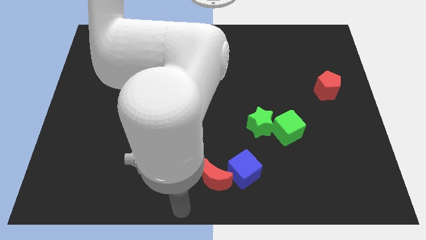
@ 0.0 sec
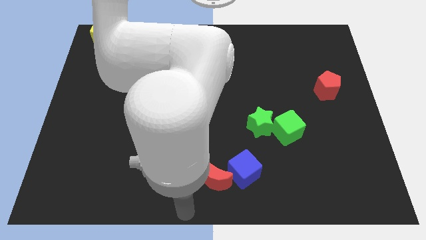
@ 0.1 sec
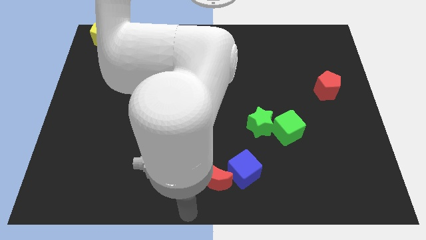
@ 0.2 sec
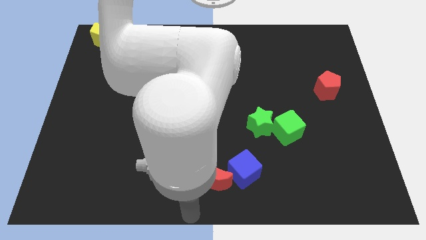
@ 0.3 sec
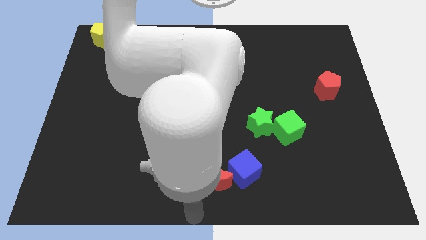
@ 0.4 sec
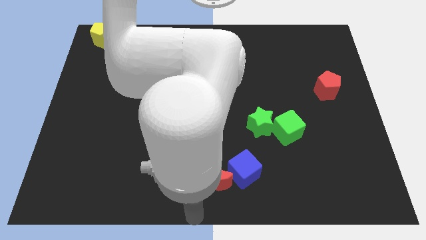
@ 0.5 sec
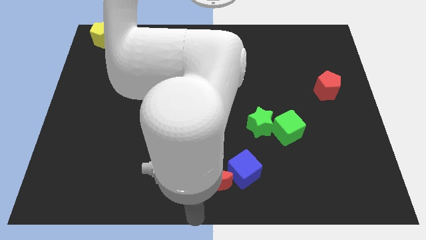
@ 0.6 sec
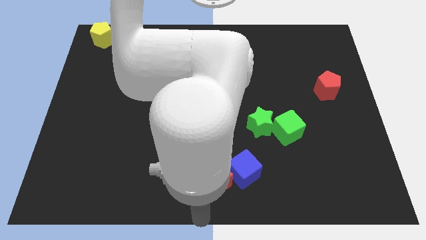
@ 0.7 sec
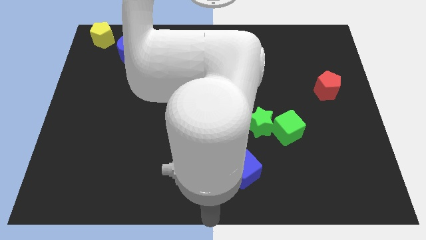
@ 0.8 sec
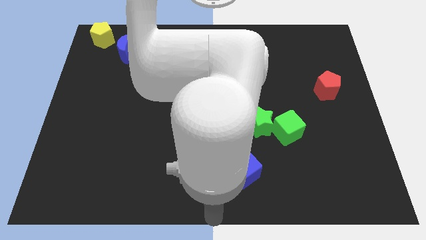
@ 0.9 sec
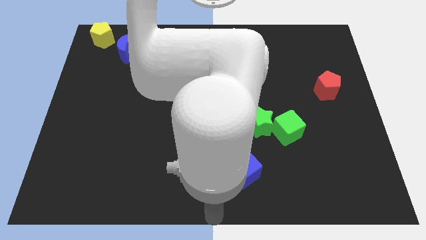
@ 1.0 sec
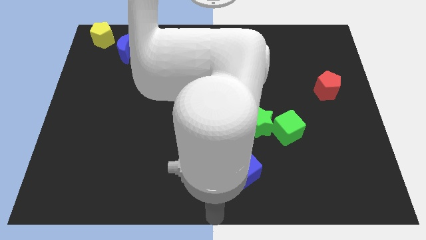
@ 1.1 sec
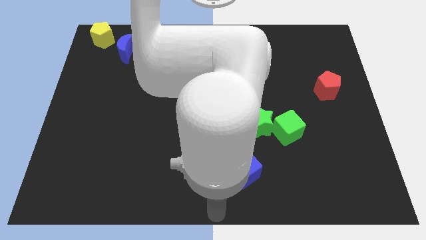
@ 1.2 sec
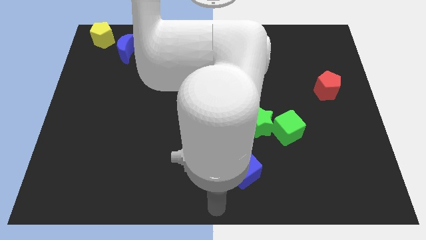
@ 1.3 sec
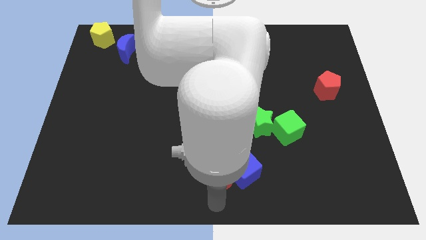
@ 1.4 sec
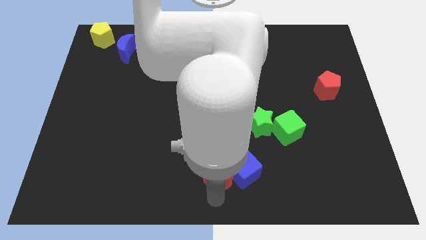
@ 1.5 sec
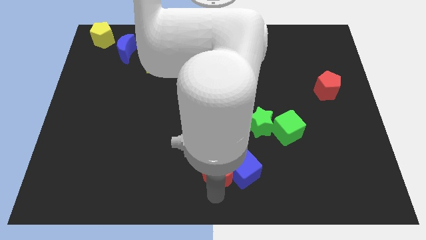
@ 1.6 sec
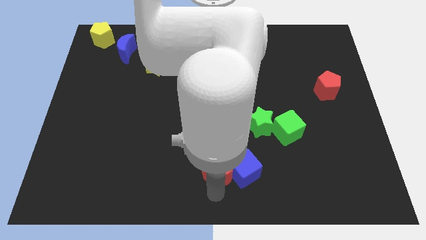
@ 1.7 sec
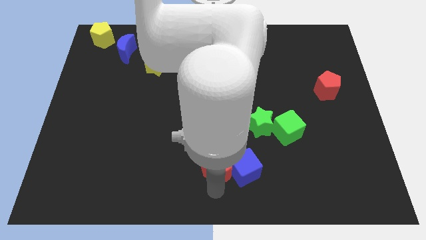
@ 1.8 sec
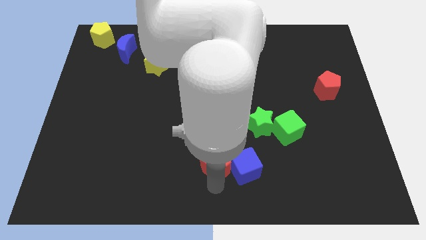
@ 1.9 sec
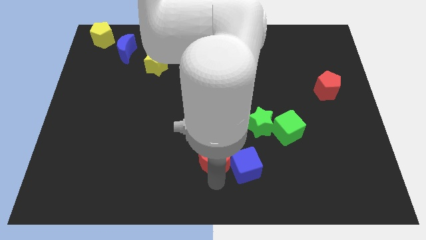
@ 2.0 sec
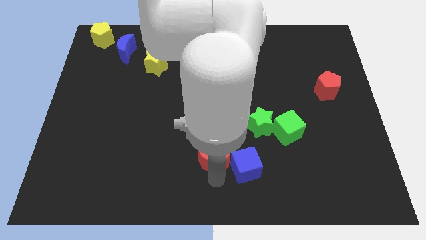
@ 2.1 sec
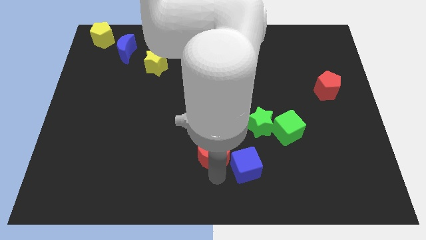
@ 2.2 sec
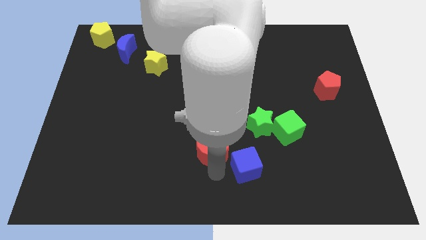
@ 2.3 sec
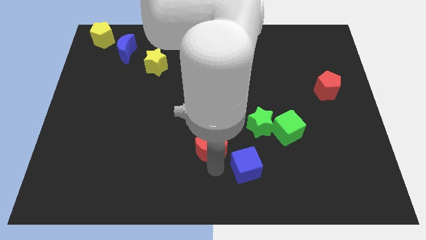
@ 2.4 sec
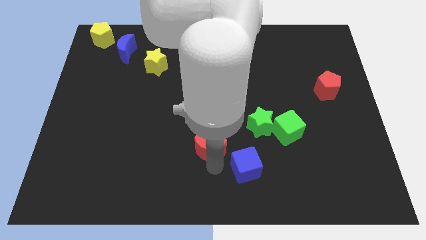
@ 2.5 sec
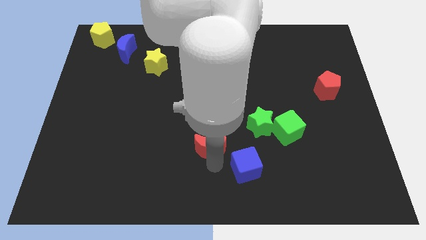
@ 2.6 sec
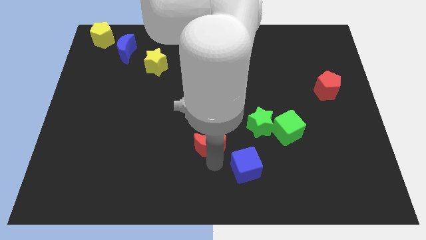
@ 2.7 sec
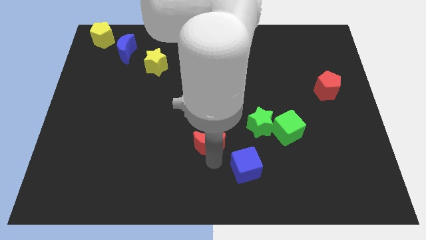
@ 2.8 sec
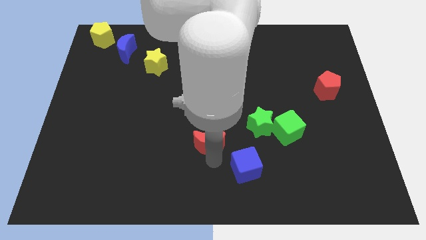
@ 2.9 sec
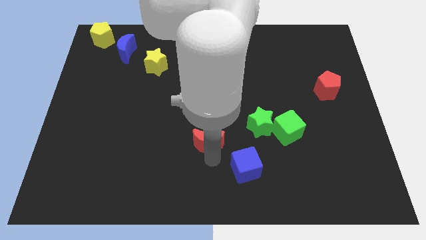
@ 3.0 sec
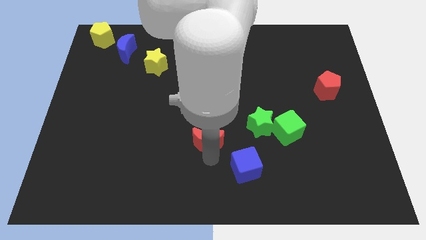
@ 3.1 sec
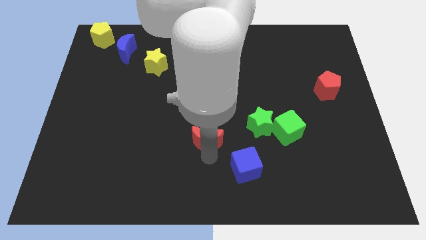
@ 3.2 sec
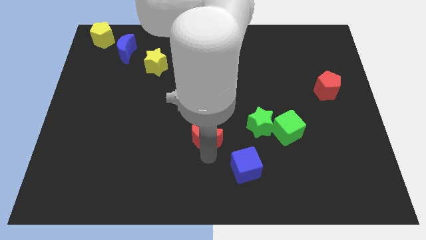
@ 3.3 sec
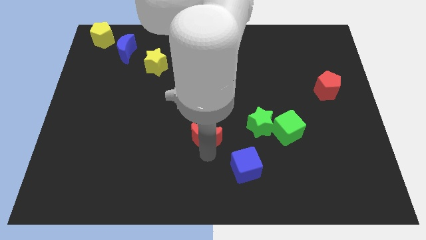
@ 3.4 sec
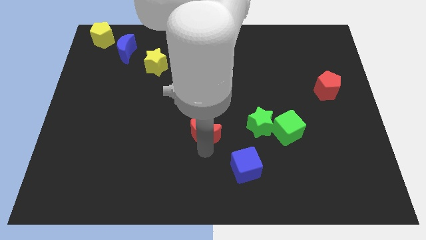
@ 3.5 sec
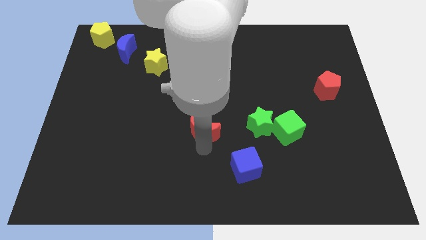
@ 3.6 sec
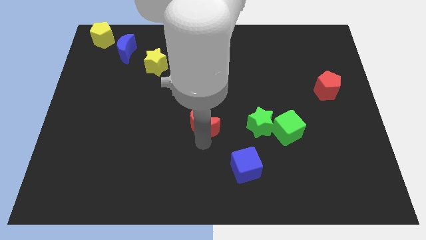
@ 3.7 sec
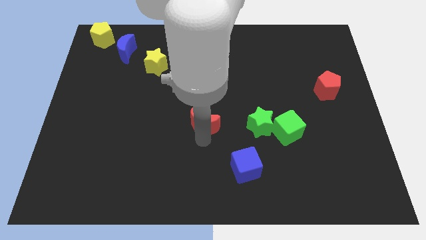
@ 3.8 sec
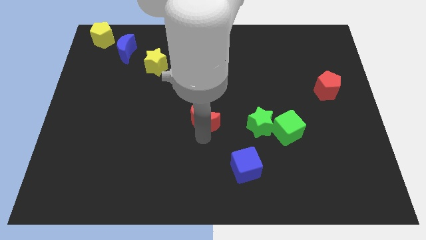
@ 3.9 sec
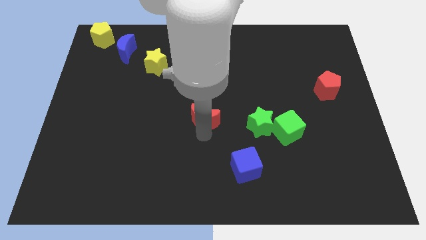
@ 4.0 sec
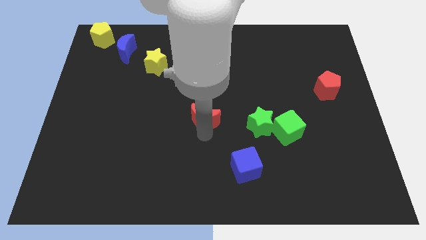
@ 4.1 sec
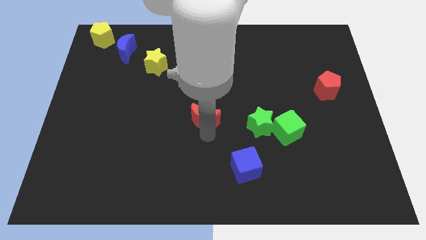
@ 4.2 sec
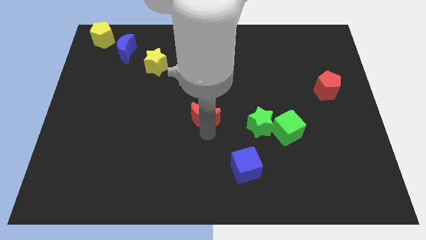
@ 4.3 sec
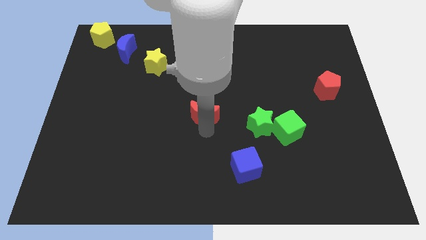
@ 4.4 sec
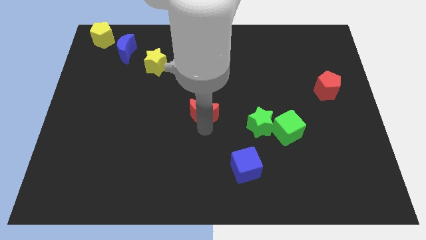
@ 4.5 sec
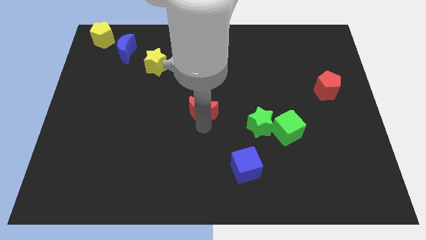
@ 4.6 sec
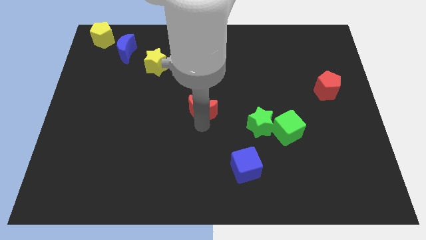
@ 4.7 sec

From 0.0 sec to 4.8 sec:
separate the red moon and blue cube

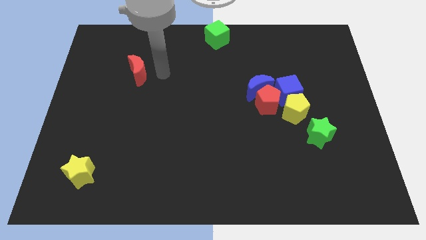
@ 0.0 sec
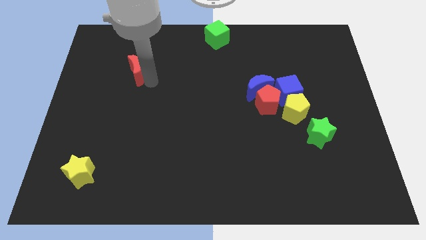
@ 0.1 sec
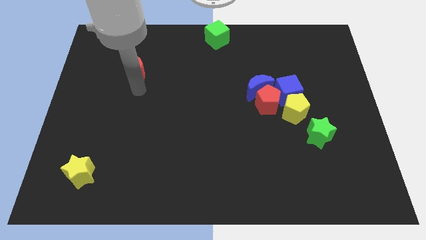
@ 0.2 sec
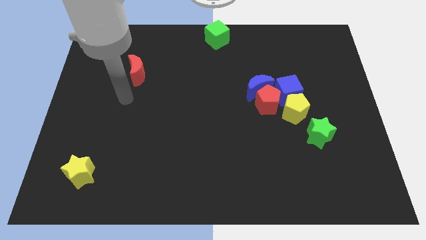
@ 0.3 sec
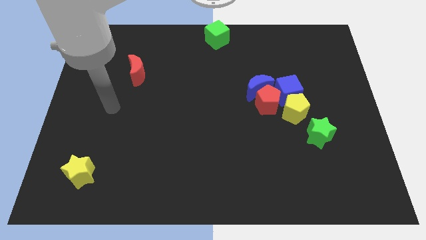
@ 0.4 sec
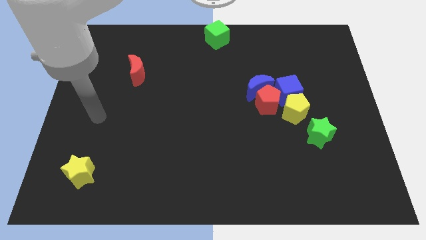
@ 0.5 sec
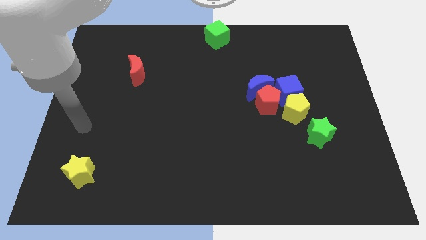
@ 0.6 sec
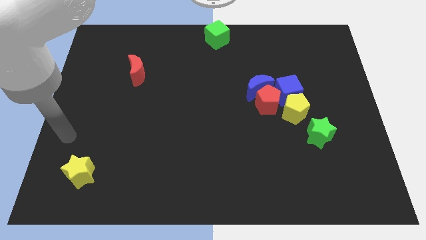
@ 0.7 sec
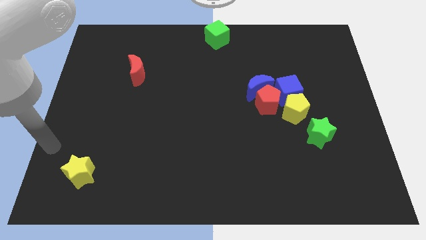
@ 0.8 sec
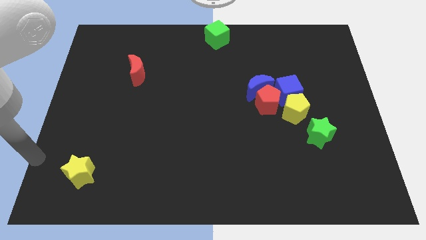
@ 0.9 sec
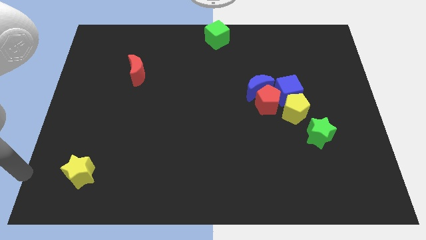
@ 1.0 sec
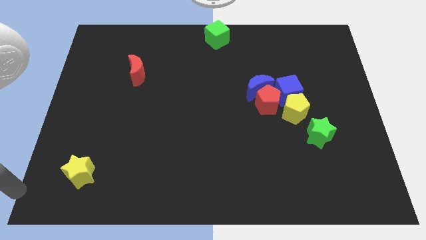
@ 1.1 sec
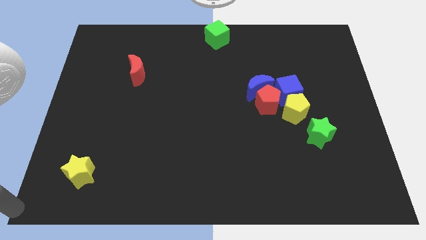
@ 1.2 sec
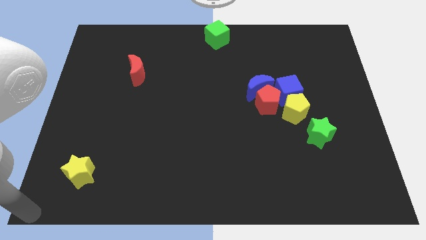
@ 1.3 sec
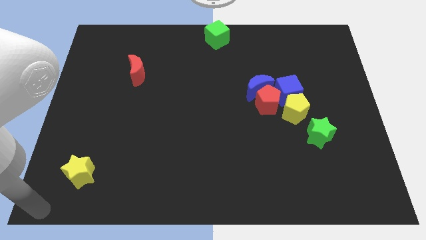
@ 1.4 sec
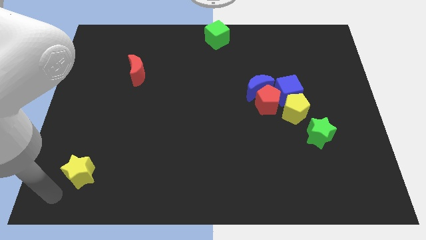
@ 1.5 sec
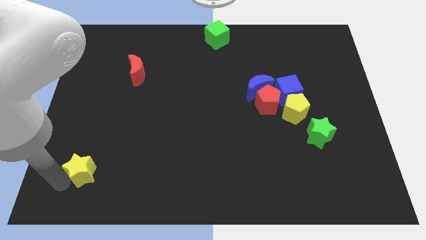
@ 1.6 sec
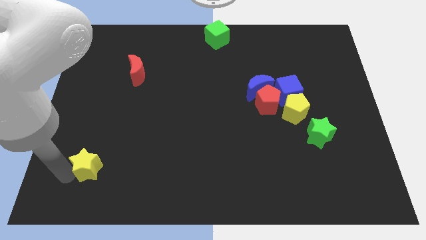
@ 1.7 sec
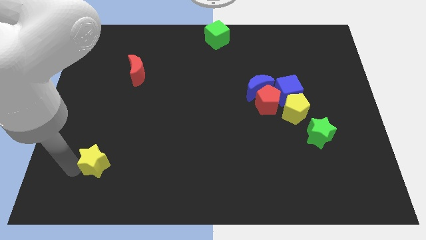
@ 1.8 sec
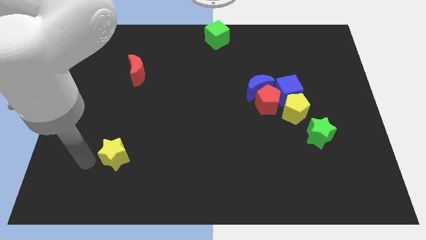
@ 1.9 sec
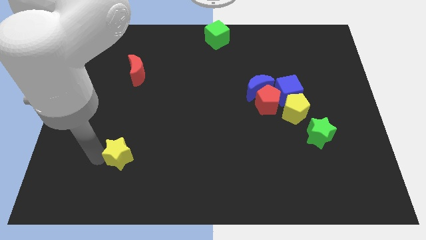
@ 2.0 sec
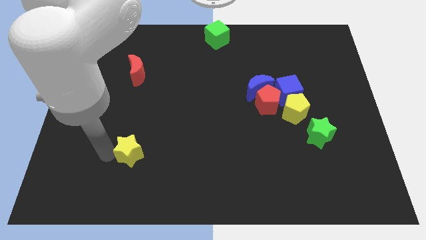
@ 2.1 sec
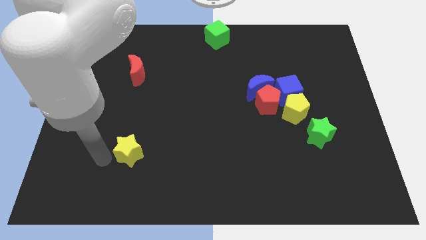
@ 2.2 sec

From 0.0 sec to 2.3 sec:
place the yellow star vertically below the red crescent

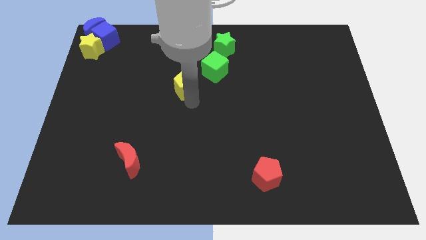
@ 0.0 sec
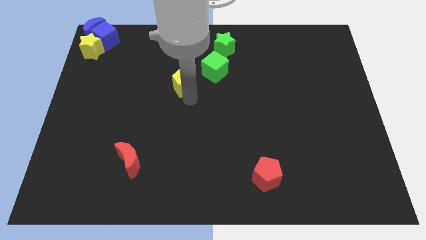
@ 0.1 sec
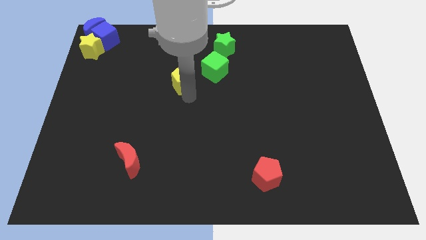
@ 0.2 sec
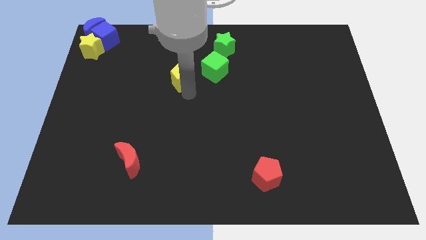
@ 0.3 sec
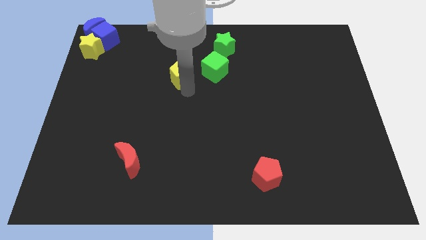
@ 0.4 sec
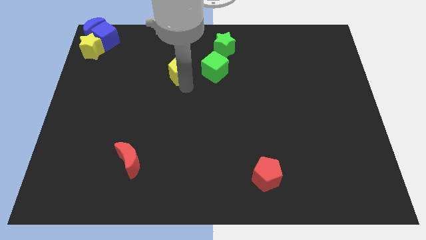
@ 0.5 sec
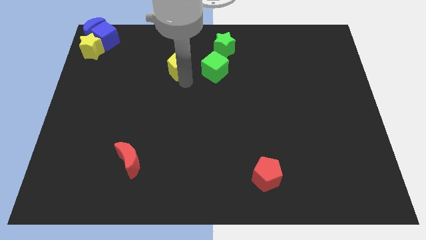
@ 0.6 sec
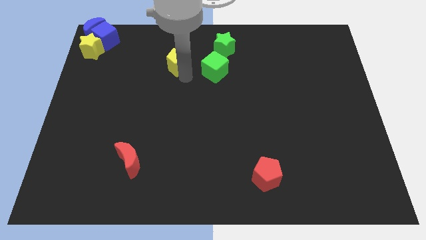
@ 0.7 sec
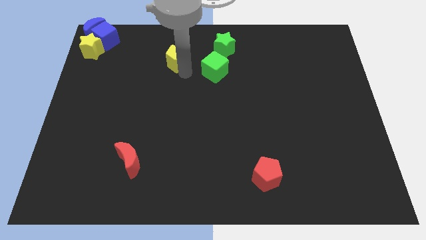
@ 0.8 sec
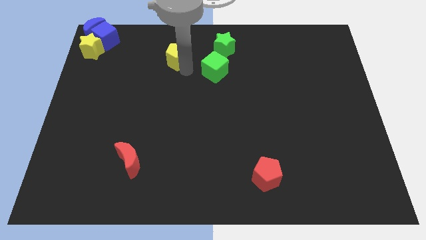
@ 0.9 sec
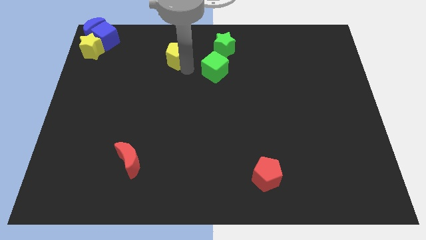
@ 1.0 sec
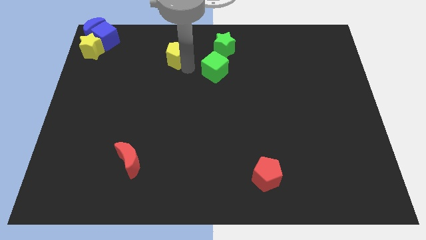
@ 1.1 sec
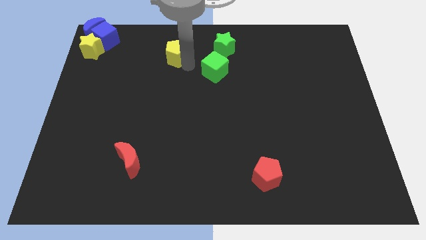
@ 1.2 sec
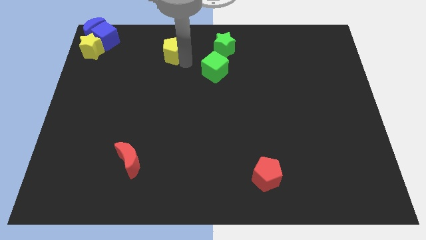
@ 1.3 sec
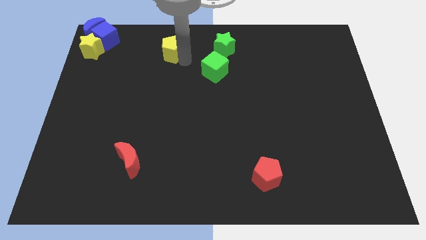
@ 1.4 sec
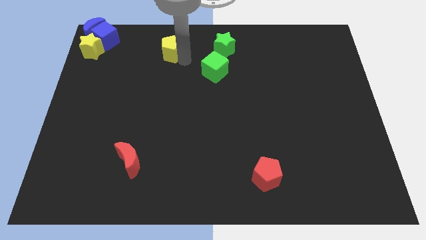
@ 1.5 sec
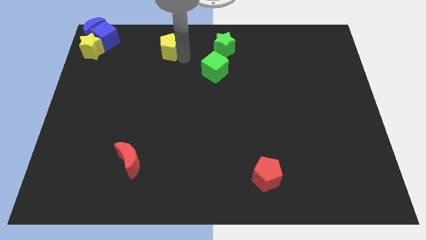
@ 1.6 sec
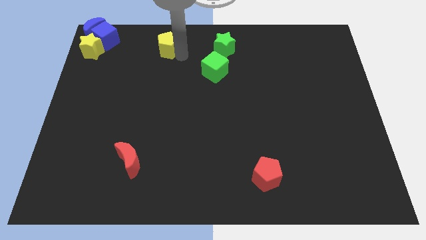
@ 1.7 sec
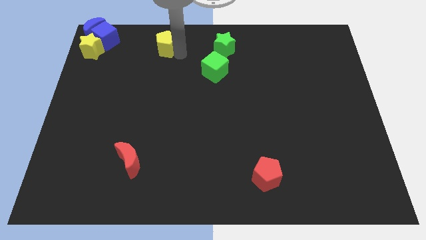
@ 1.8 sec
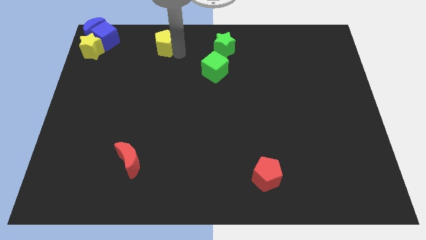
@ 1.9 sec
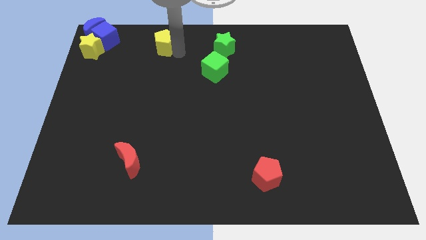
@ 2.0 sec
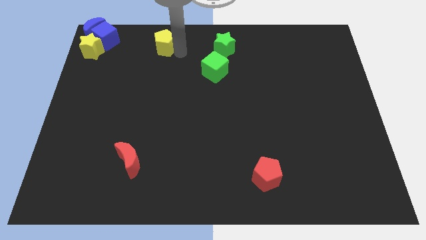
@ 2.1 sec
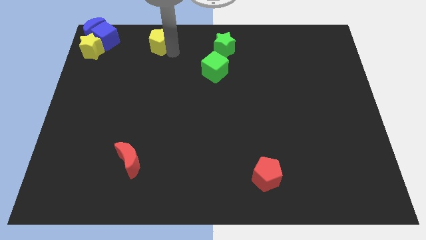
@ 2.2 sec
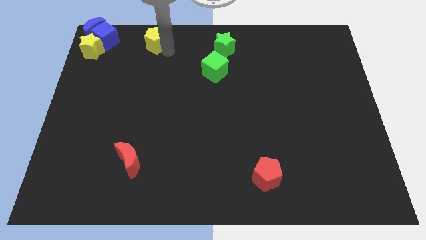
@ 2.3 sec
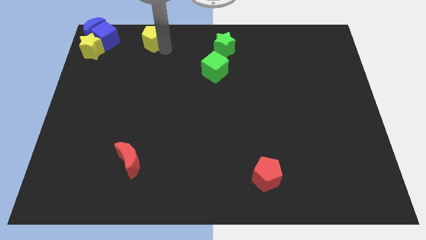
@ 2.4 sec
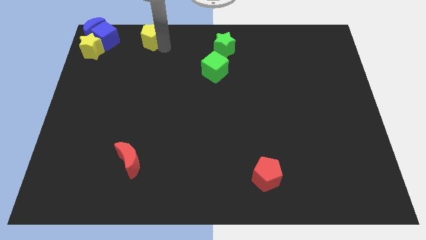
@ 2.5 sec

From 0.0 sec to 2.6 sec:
move the yellow pentagon to the top center
